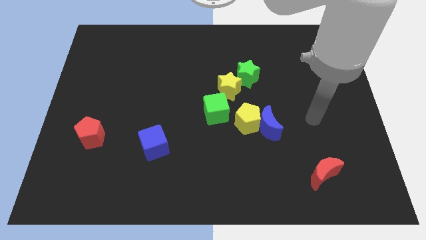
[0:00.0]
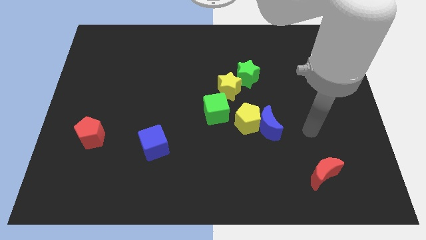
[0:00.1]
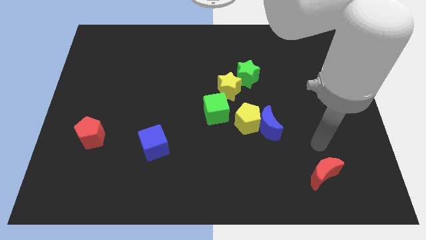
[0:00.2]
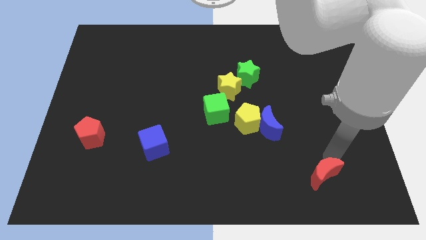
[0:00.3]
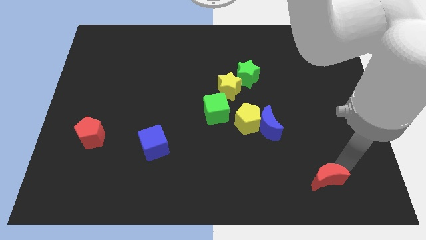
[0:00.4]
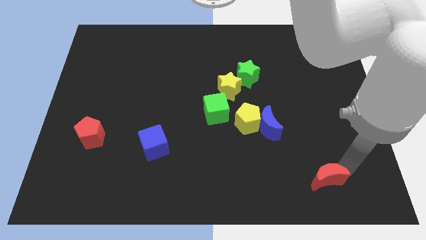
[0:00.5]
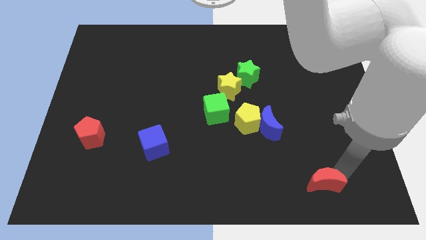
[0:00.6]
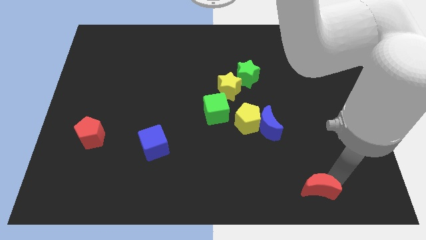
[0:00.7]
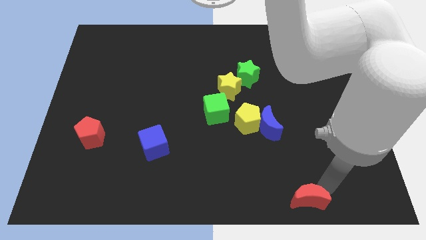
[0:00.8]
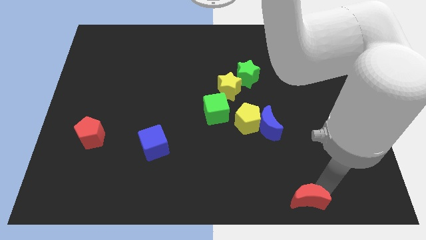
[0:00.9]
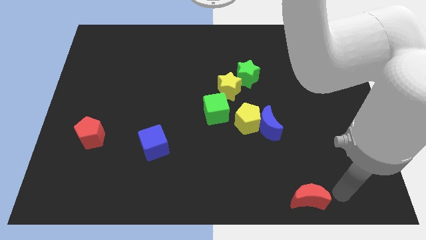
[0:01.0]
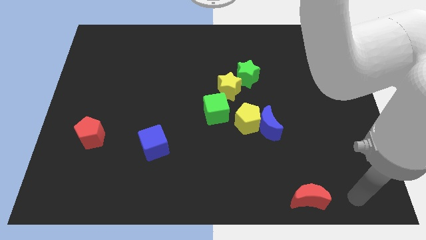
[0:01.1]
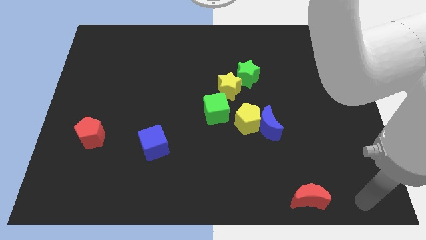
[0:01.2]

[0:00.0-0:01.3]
push the red moon downward

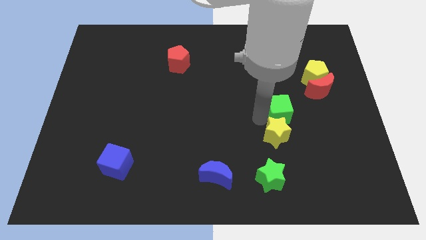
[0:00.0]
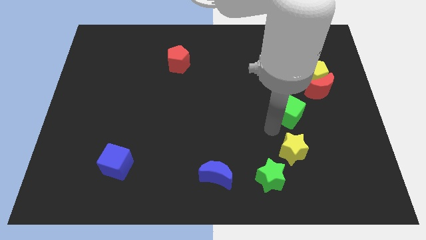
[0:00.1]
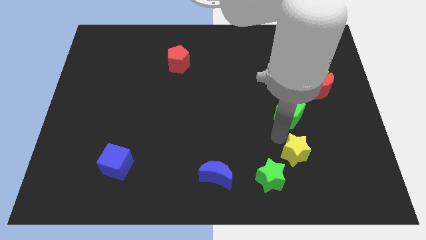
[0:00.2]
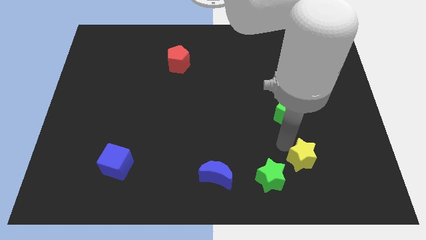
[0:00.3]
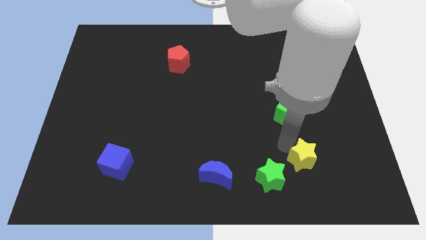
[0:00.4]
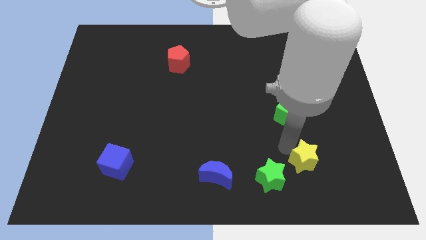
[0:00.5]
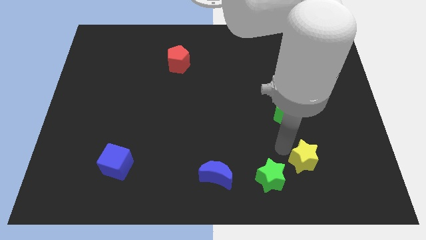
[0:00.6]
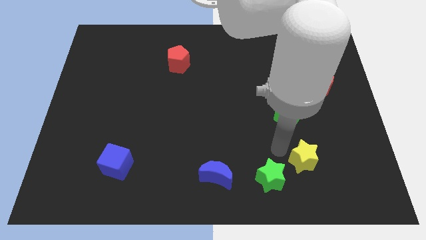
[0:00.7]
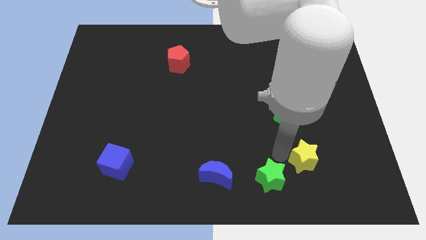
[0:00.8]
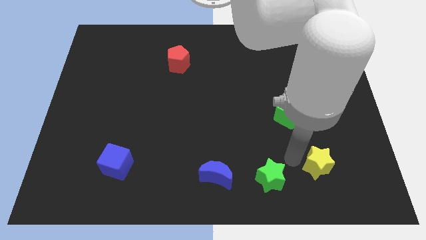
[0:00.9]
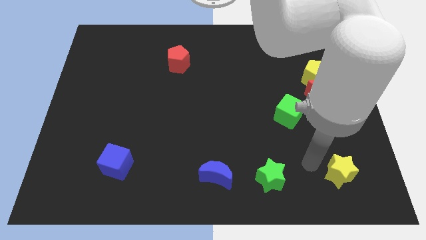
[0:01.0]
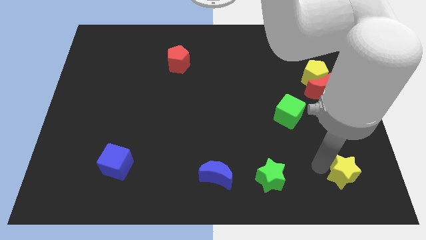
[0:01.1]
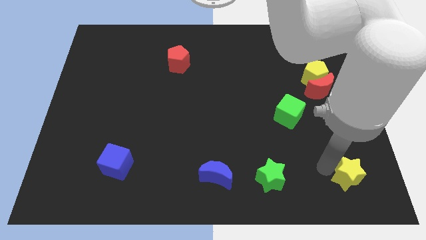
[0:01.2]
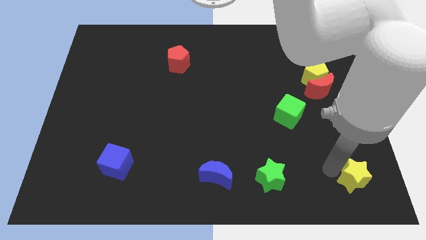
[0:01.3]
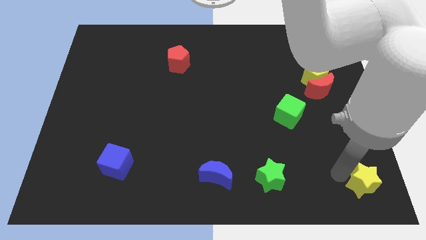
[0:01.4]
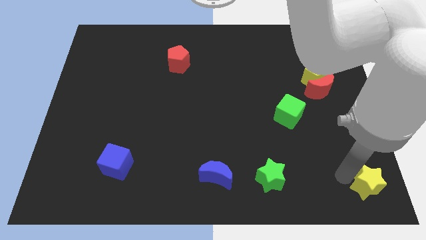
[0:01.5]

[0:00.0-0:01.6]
move the yellow star to the right of the green star

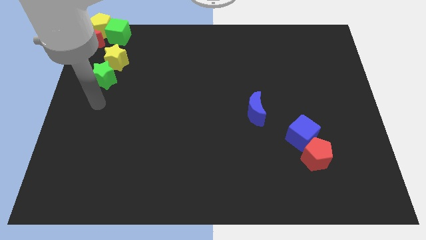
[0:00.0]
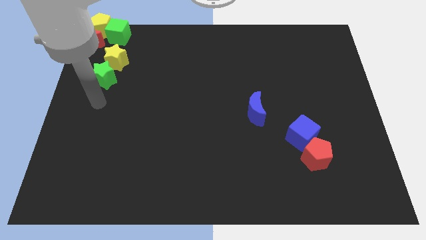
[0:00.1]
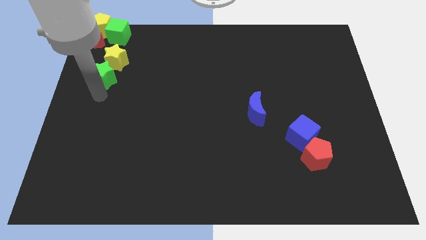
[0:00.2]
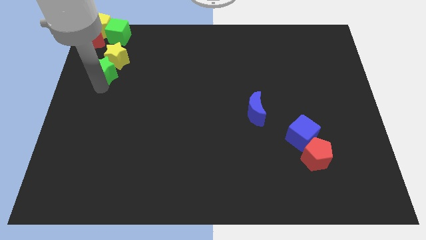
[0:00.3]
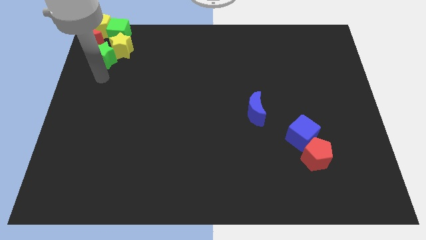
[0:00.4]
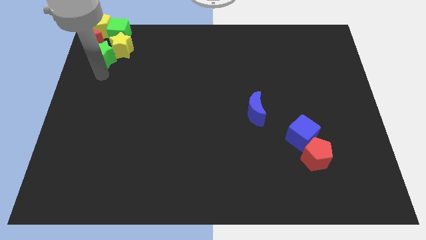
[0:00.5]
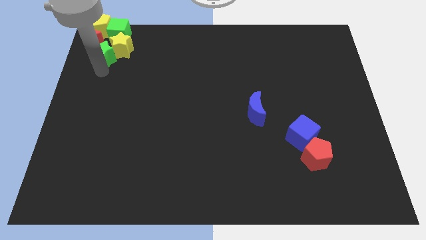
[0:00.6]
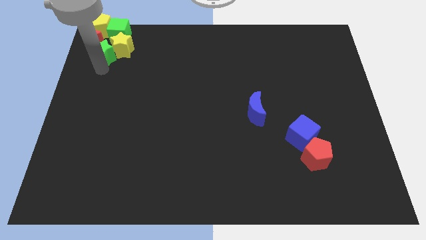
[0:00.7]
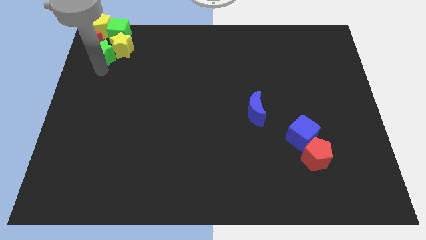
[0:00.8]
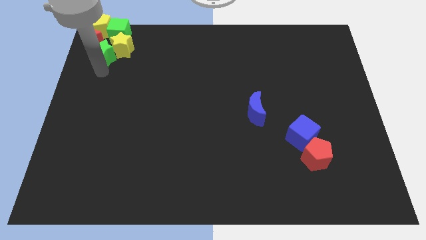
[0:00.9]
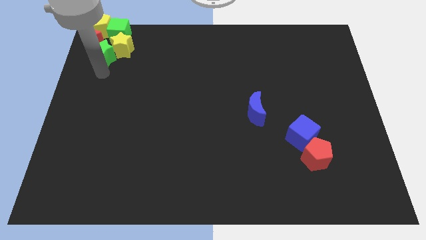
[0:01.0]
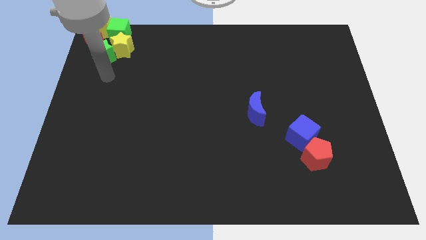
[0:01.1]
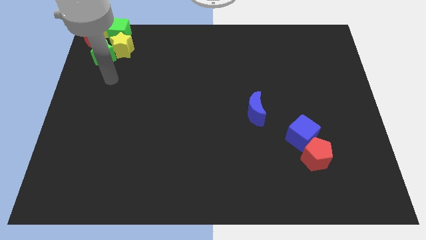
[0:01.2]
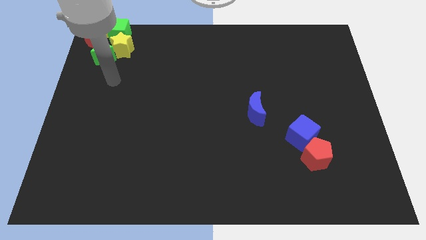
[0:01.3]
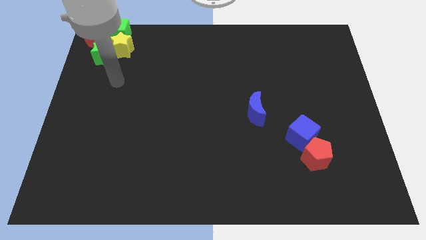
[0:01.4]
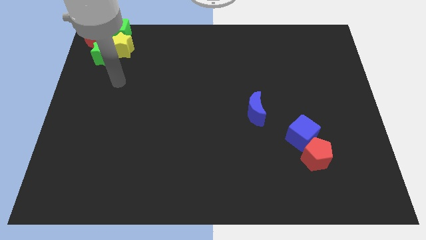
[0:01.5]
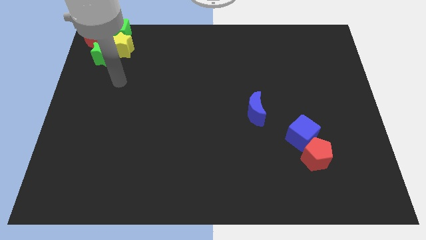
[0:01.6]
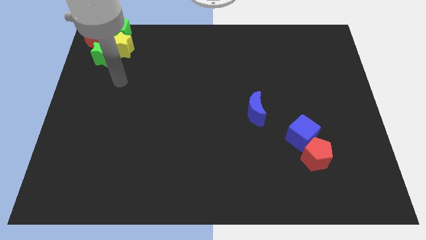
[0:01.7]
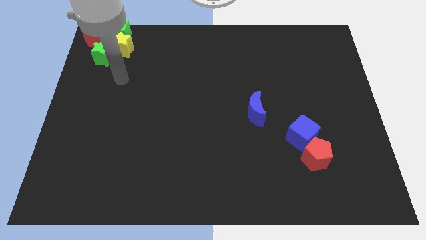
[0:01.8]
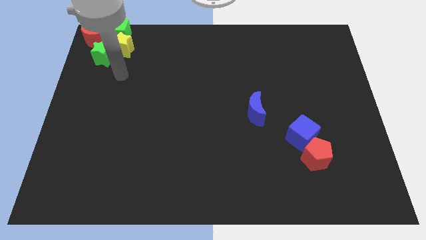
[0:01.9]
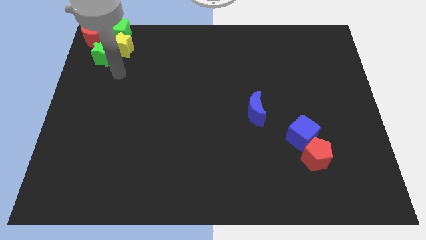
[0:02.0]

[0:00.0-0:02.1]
place the stars towards the red crescent

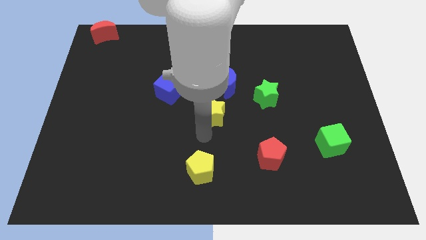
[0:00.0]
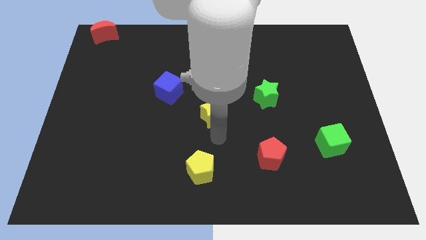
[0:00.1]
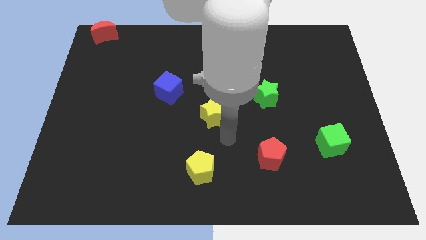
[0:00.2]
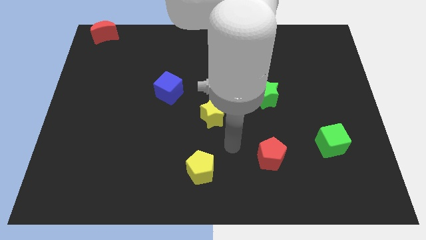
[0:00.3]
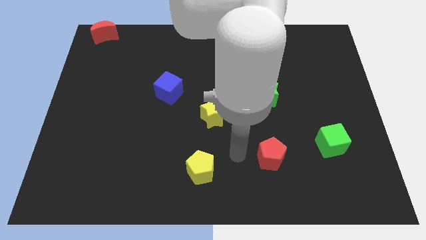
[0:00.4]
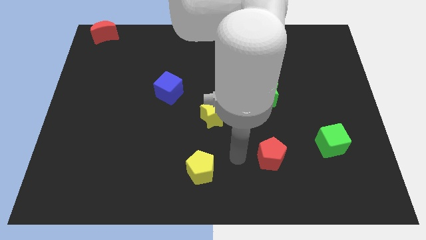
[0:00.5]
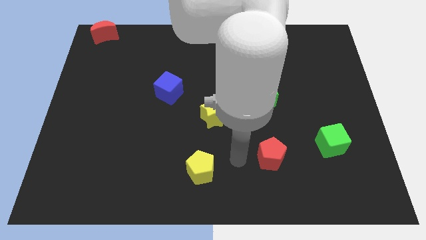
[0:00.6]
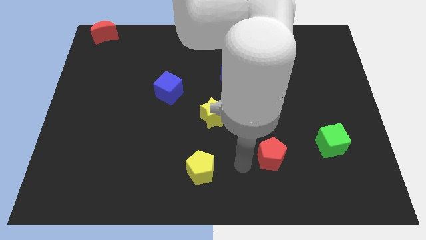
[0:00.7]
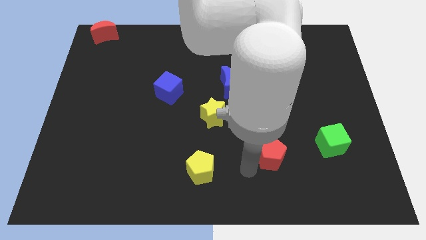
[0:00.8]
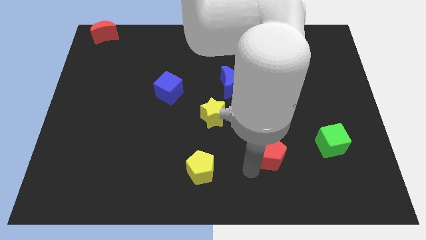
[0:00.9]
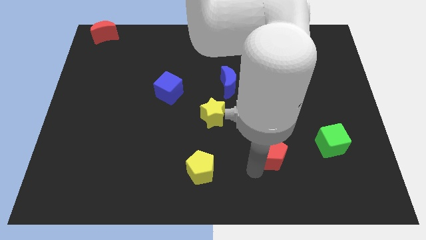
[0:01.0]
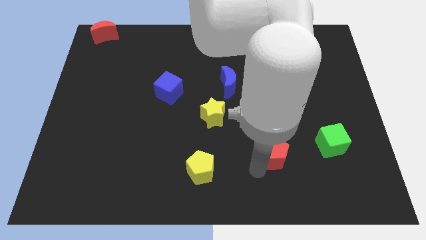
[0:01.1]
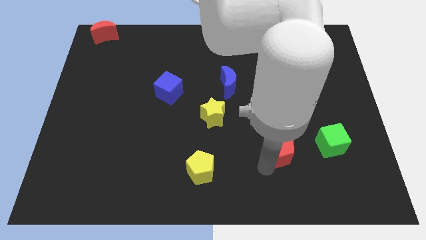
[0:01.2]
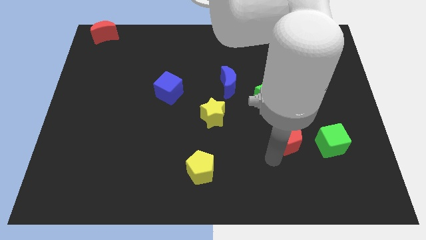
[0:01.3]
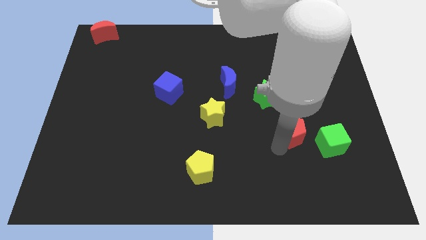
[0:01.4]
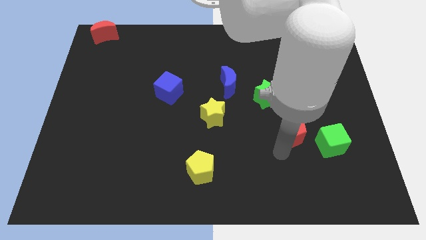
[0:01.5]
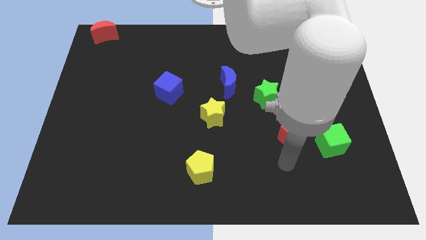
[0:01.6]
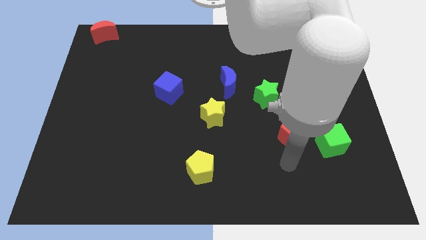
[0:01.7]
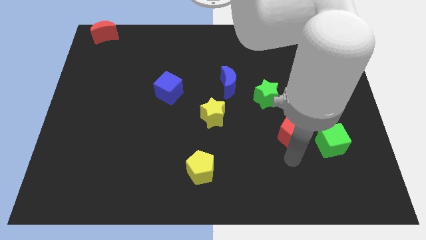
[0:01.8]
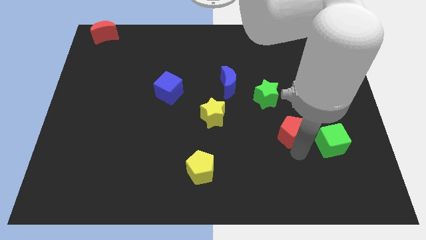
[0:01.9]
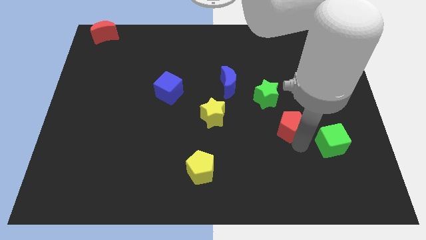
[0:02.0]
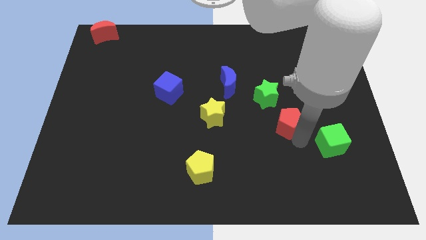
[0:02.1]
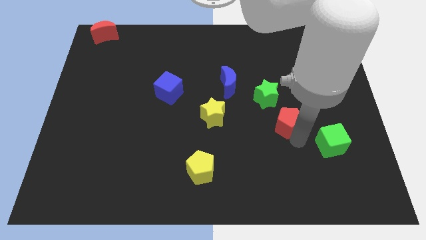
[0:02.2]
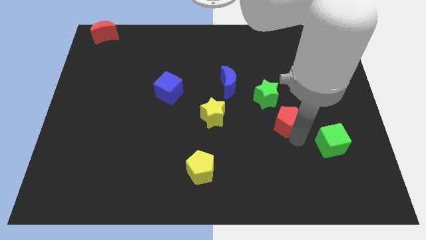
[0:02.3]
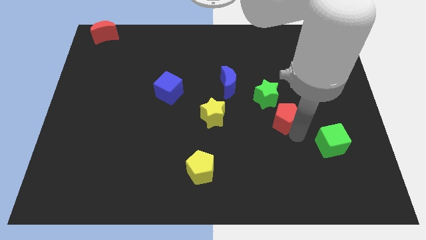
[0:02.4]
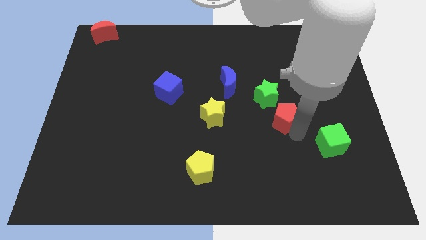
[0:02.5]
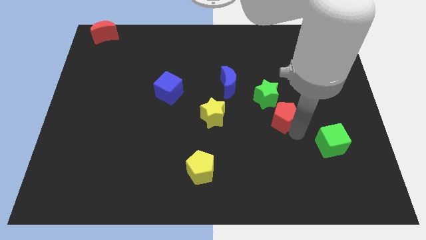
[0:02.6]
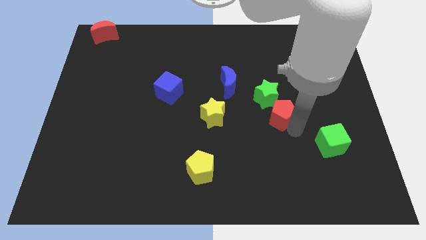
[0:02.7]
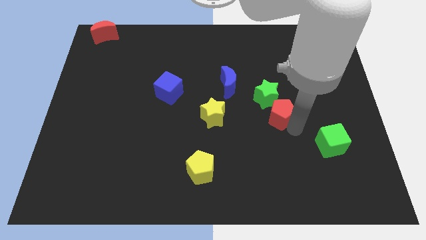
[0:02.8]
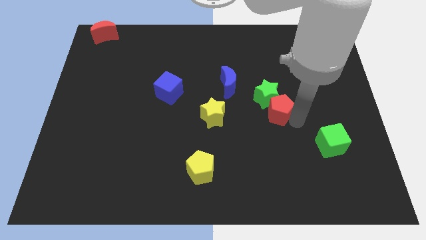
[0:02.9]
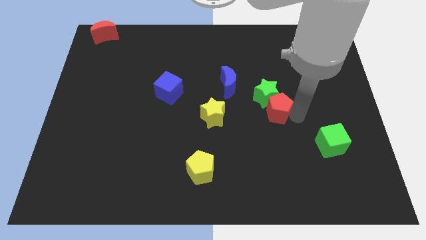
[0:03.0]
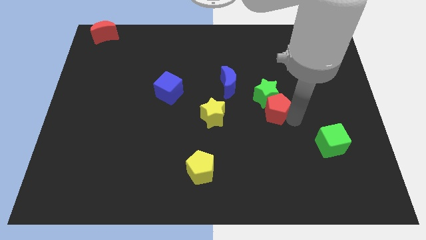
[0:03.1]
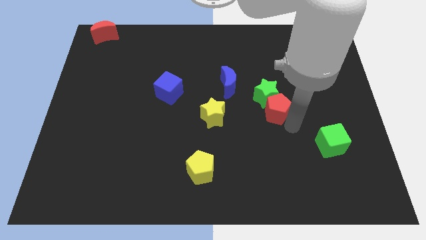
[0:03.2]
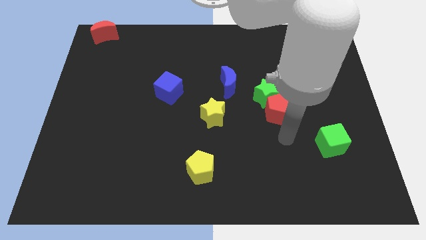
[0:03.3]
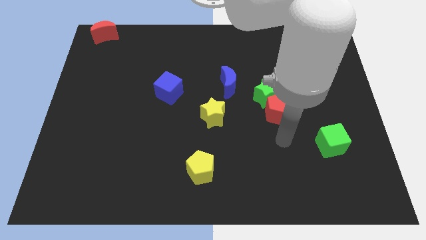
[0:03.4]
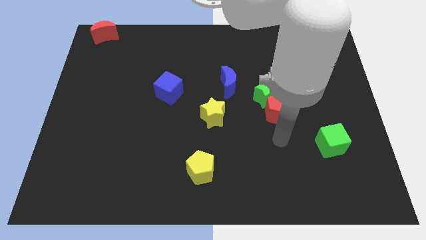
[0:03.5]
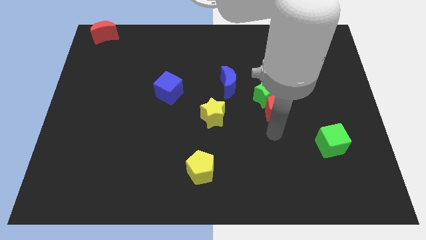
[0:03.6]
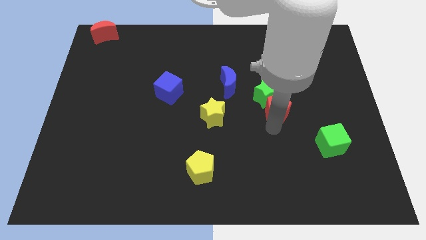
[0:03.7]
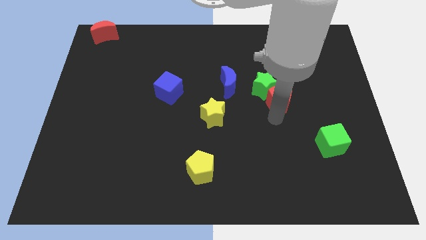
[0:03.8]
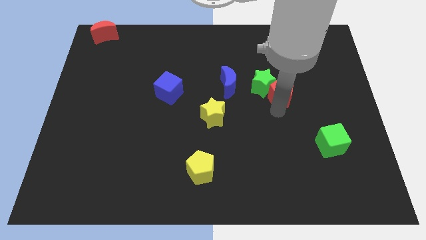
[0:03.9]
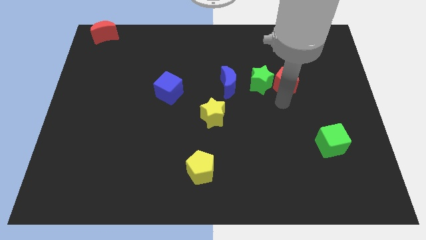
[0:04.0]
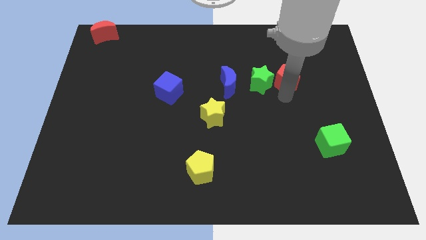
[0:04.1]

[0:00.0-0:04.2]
move the red pentagon to the right of the green star
